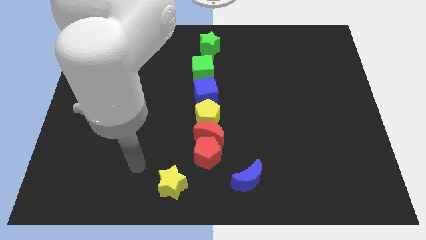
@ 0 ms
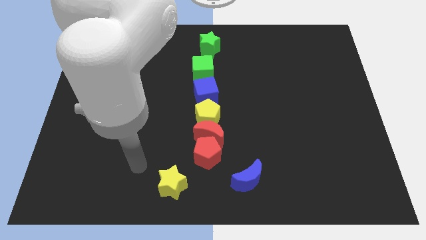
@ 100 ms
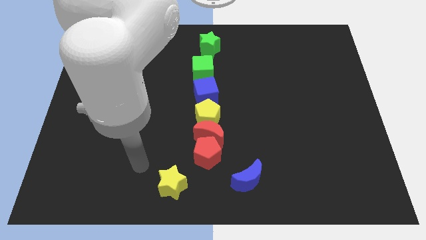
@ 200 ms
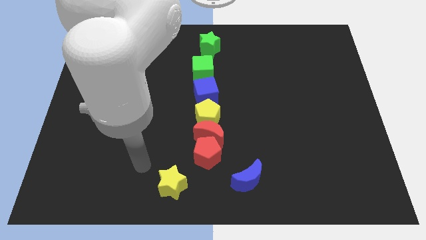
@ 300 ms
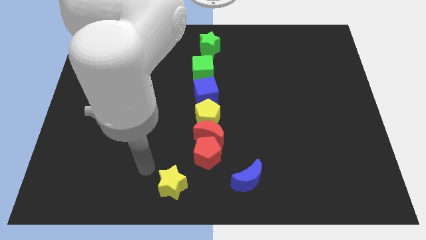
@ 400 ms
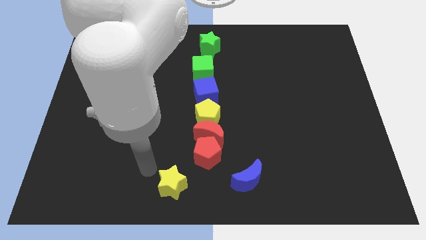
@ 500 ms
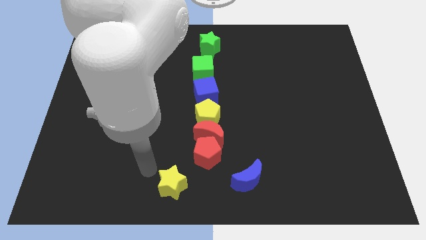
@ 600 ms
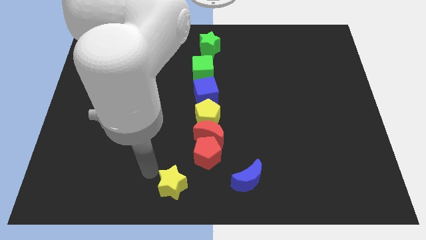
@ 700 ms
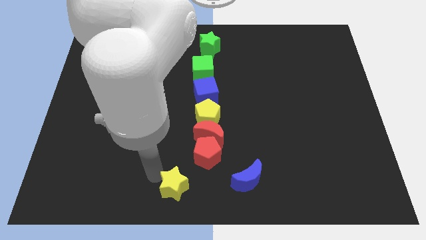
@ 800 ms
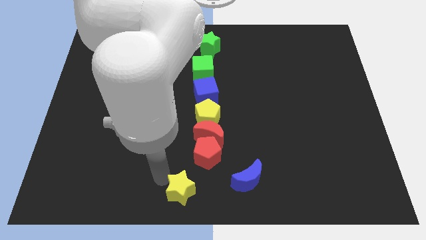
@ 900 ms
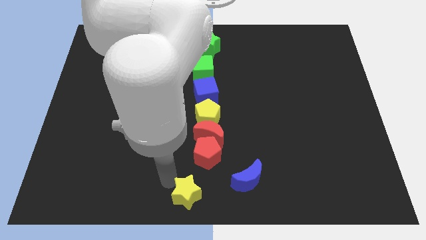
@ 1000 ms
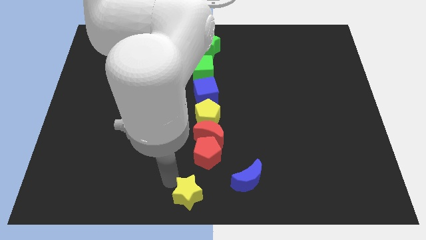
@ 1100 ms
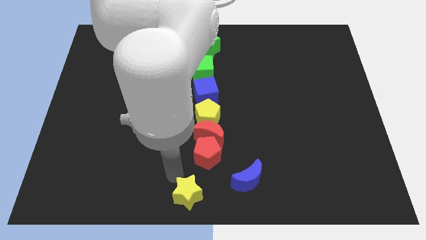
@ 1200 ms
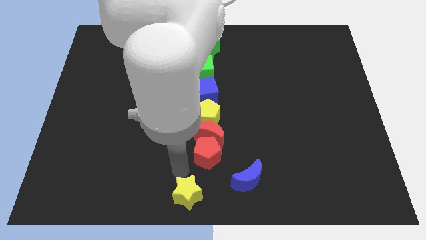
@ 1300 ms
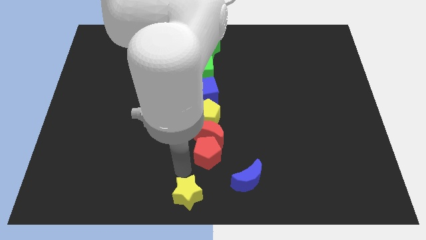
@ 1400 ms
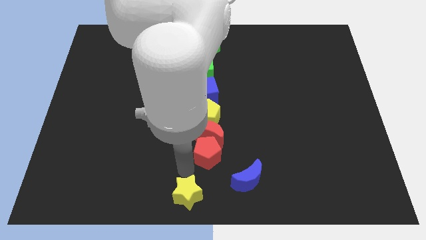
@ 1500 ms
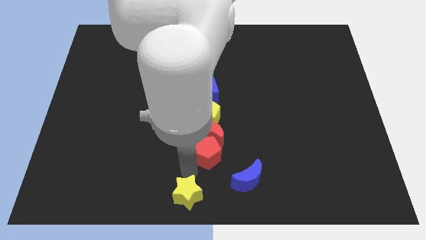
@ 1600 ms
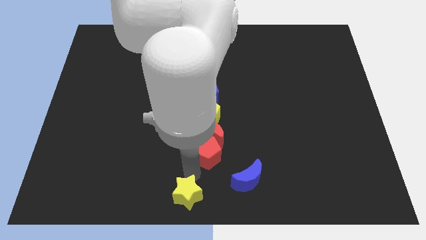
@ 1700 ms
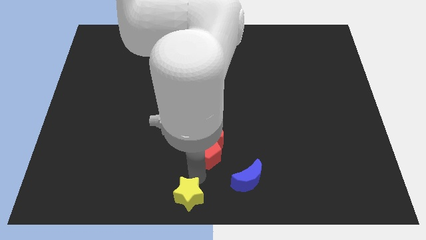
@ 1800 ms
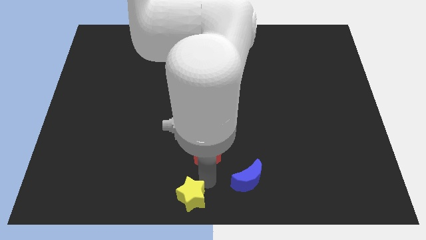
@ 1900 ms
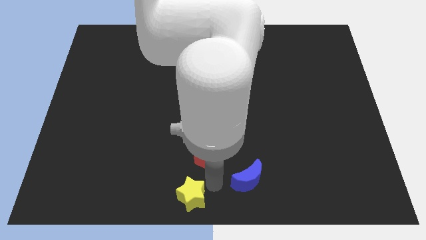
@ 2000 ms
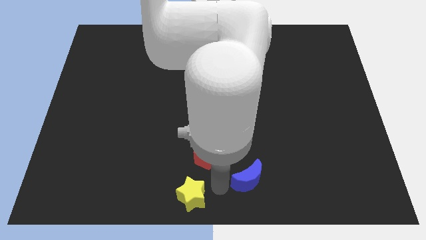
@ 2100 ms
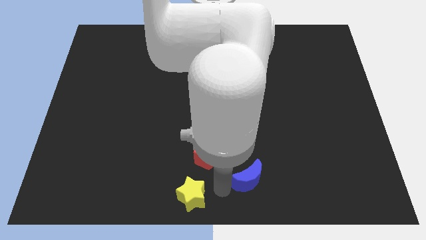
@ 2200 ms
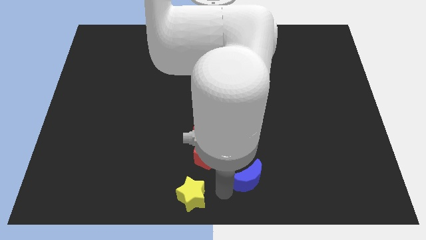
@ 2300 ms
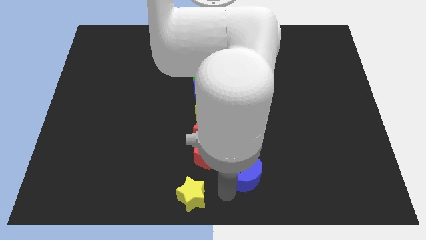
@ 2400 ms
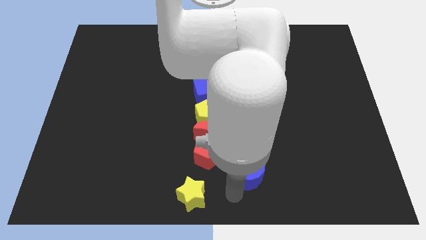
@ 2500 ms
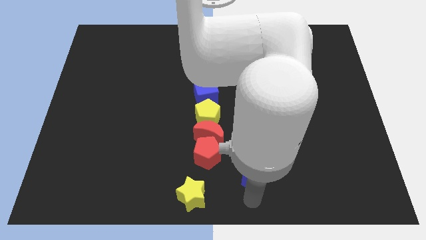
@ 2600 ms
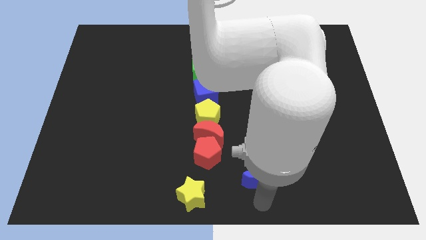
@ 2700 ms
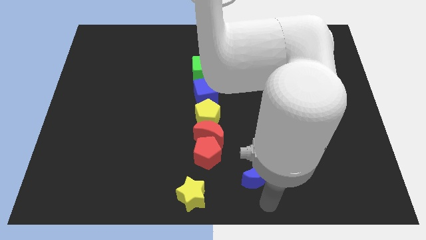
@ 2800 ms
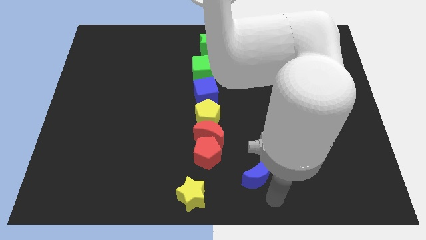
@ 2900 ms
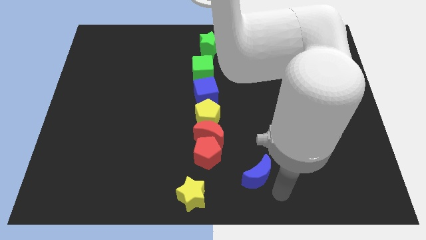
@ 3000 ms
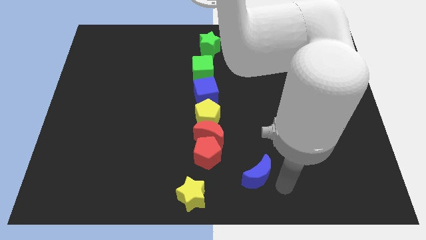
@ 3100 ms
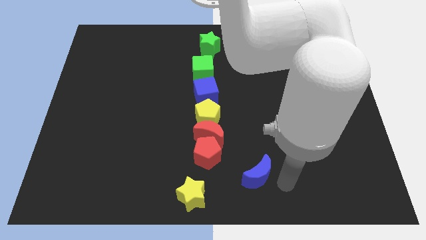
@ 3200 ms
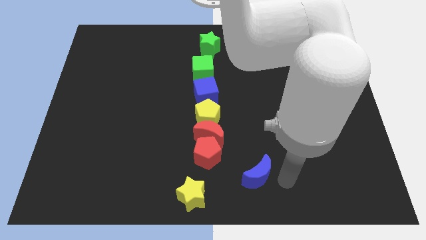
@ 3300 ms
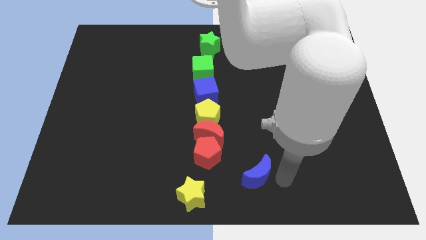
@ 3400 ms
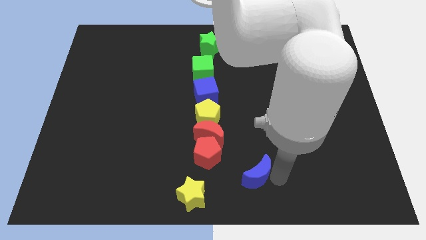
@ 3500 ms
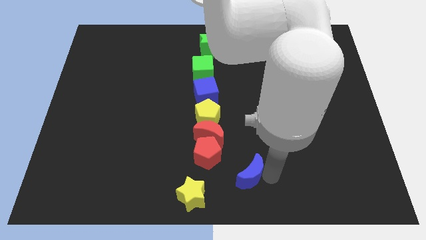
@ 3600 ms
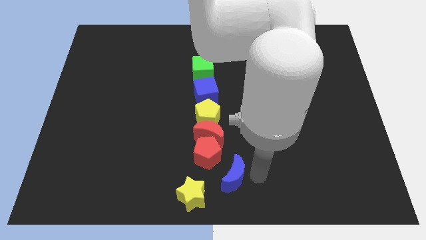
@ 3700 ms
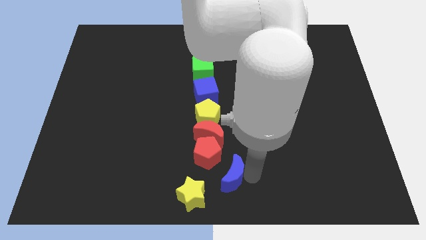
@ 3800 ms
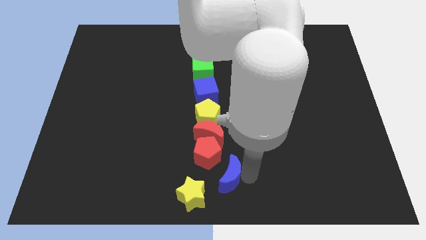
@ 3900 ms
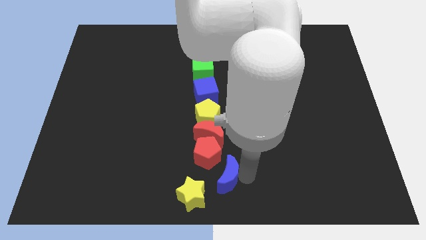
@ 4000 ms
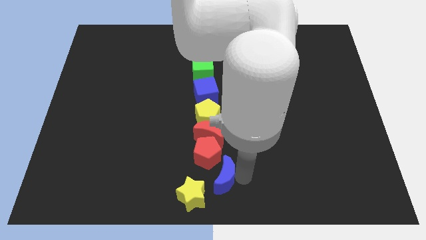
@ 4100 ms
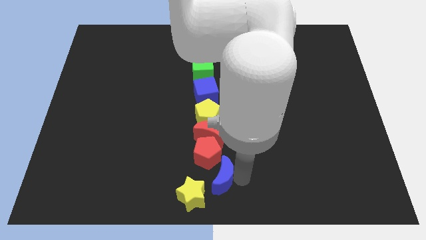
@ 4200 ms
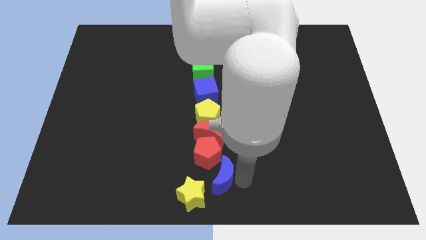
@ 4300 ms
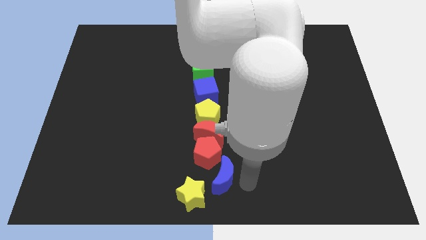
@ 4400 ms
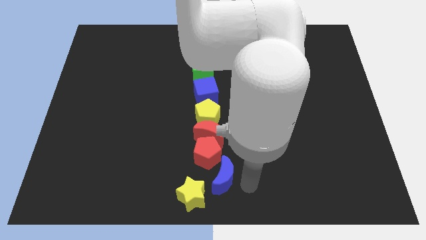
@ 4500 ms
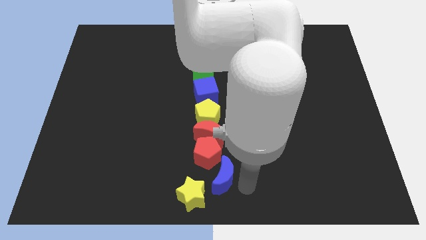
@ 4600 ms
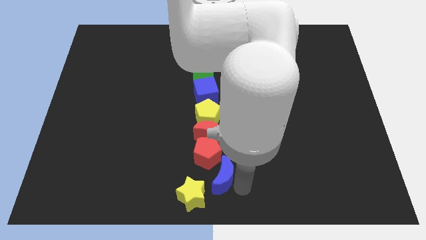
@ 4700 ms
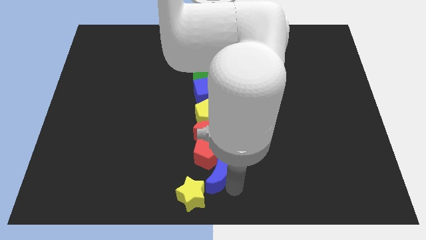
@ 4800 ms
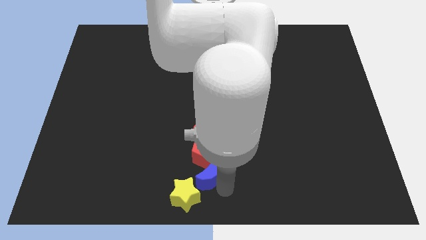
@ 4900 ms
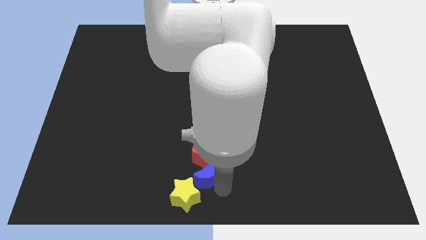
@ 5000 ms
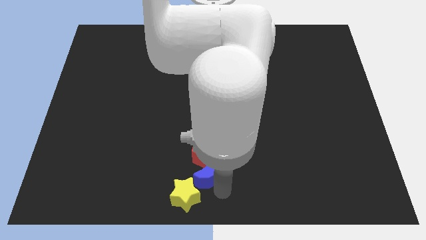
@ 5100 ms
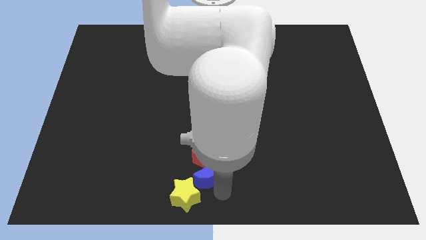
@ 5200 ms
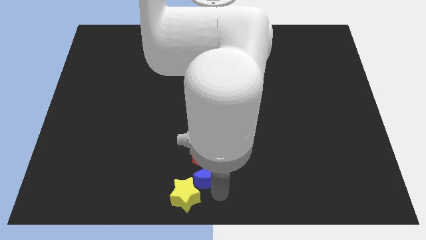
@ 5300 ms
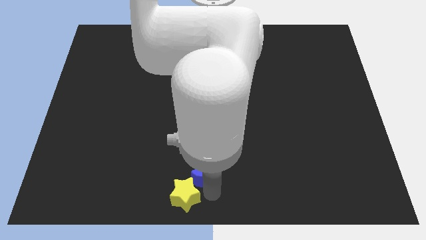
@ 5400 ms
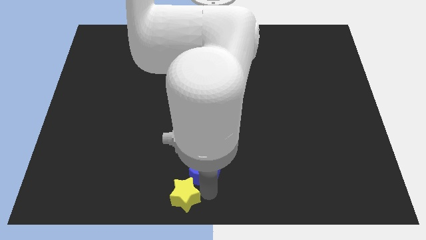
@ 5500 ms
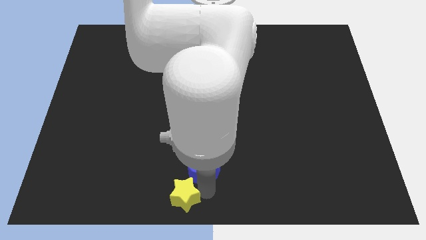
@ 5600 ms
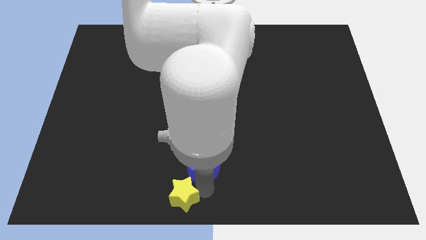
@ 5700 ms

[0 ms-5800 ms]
move the blue moon below the red pentagon

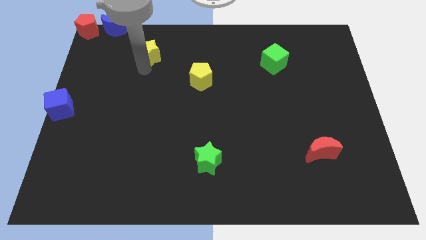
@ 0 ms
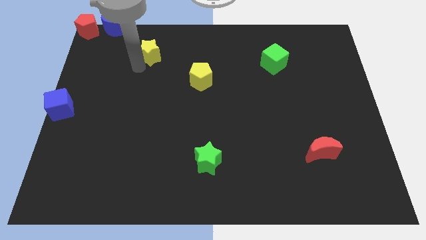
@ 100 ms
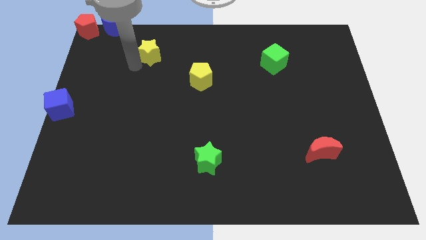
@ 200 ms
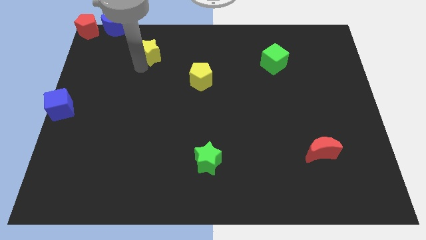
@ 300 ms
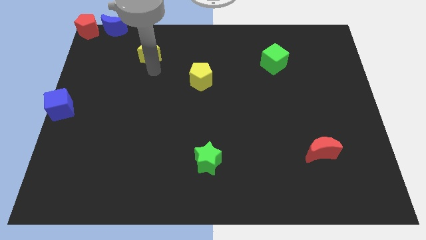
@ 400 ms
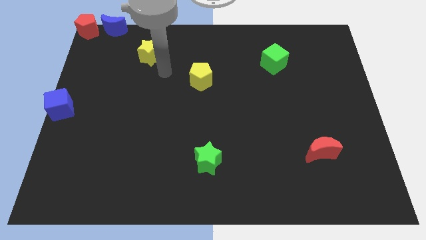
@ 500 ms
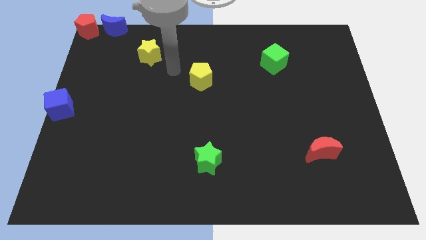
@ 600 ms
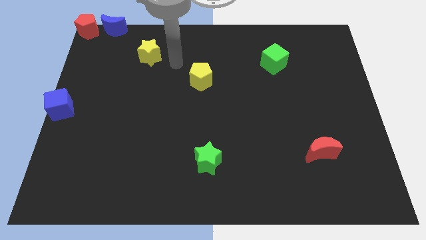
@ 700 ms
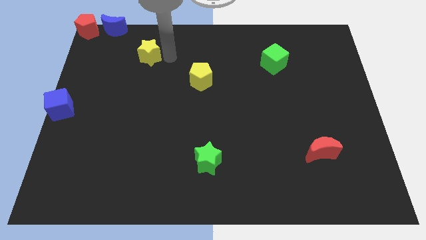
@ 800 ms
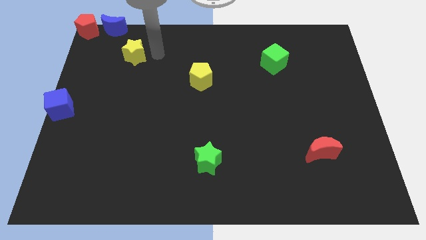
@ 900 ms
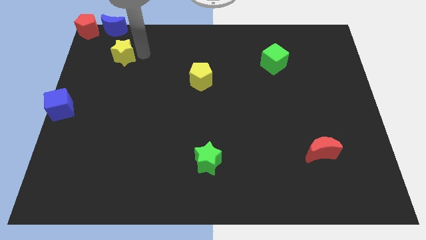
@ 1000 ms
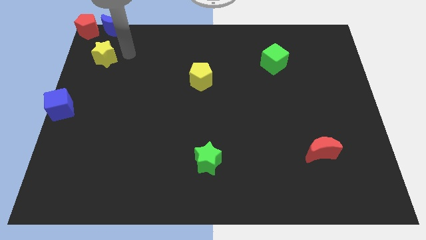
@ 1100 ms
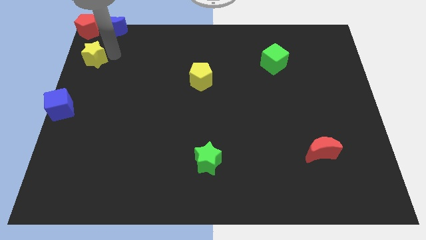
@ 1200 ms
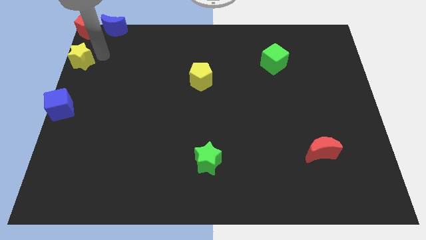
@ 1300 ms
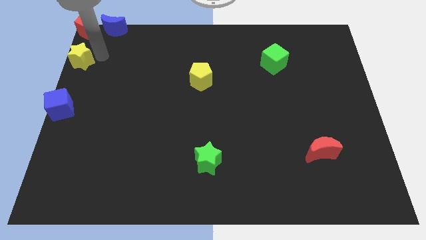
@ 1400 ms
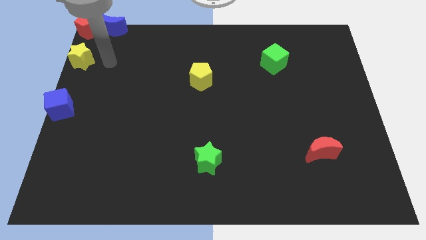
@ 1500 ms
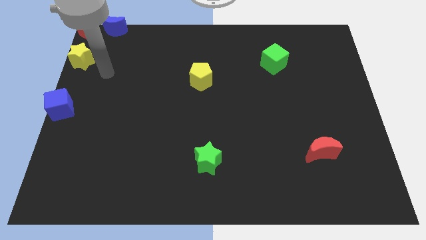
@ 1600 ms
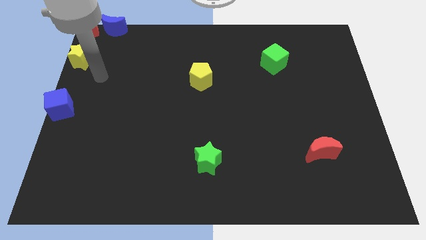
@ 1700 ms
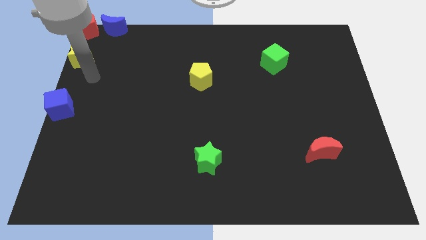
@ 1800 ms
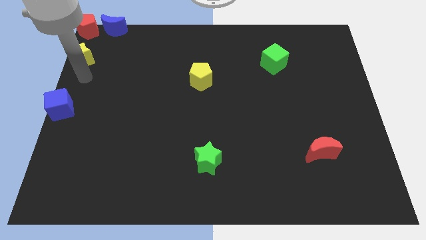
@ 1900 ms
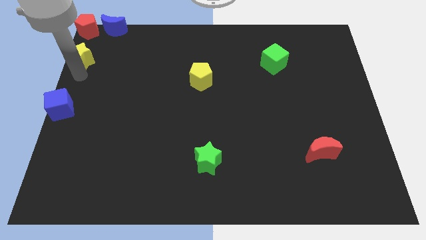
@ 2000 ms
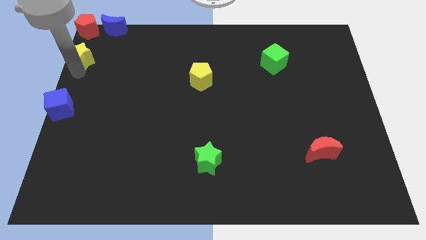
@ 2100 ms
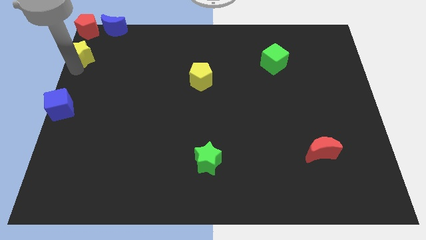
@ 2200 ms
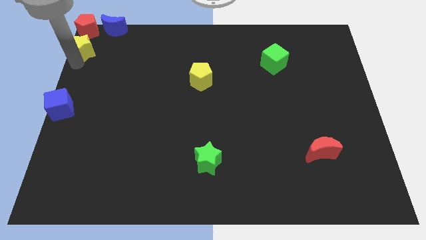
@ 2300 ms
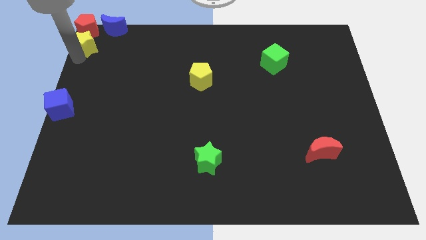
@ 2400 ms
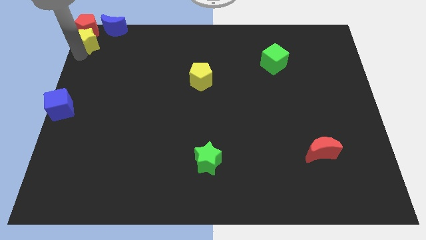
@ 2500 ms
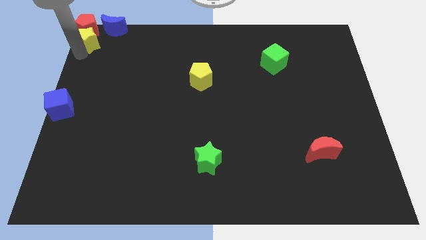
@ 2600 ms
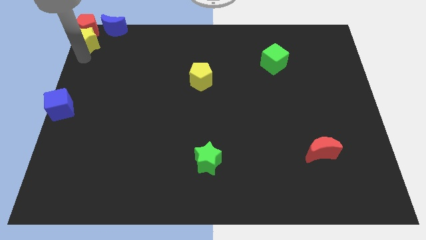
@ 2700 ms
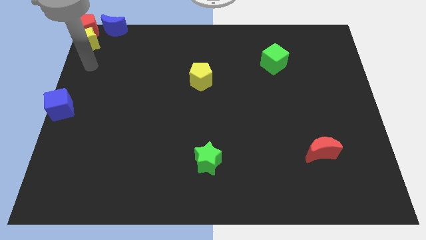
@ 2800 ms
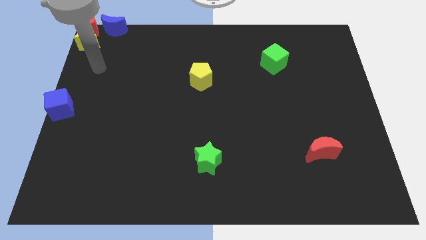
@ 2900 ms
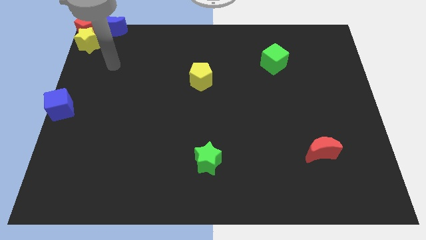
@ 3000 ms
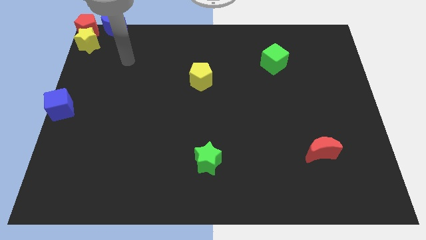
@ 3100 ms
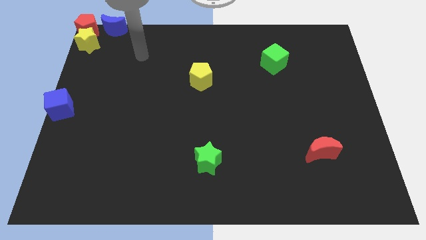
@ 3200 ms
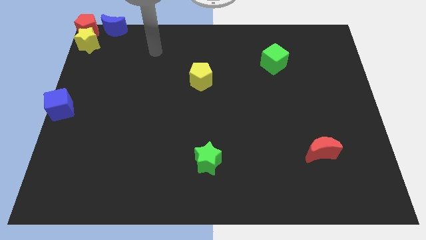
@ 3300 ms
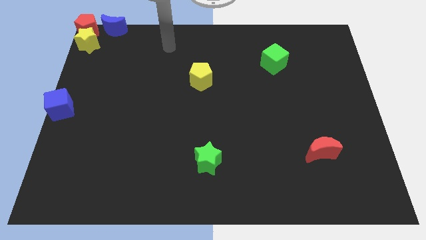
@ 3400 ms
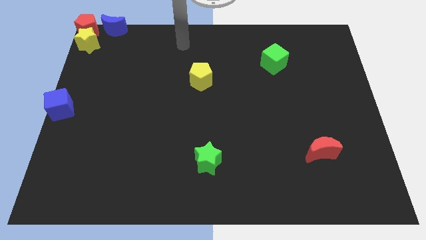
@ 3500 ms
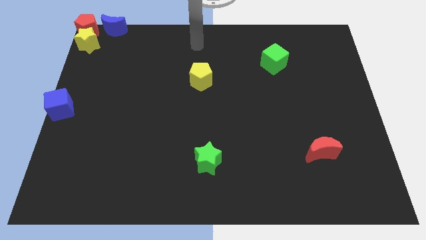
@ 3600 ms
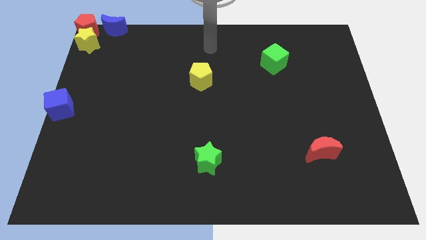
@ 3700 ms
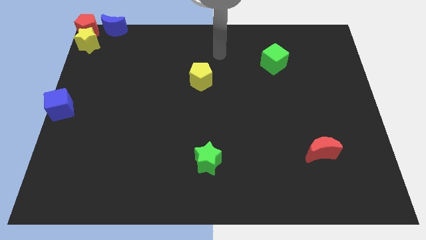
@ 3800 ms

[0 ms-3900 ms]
place the yellow star in between the red pentagon and the blue cube to form a vertical line
